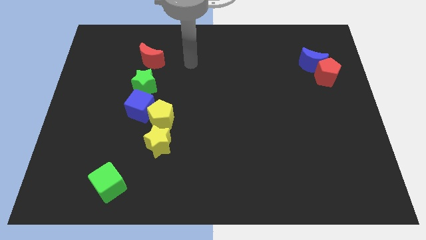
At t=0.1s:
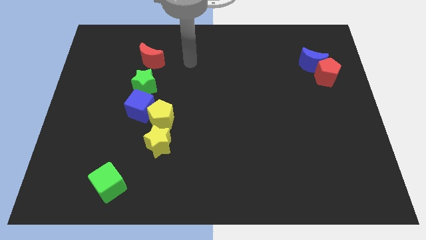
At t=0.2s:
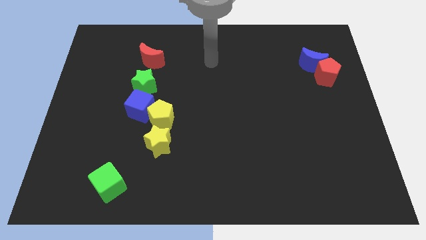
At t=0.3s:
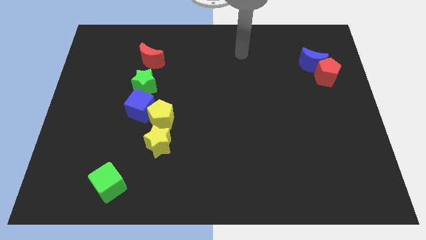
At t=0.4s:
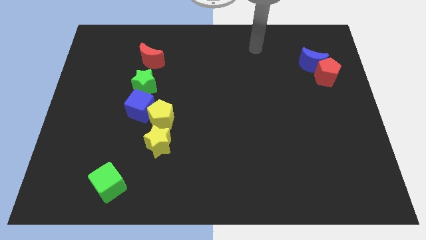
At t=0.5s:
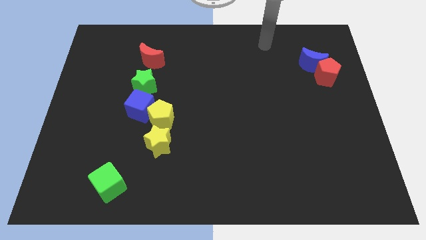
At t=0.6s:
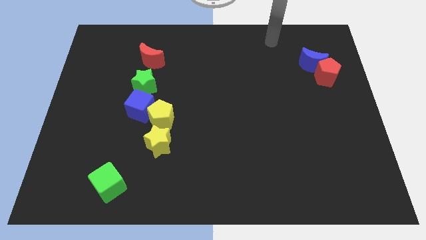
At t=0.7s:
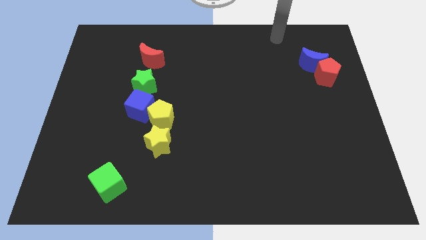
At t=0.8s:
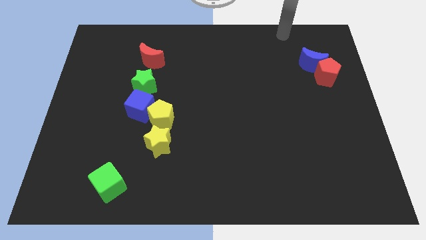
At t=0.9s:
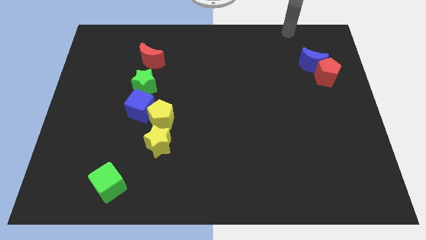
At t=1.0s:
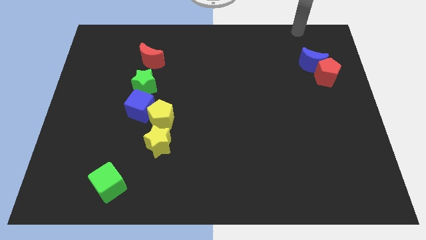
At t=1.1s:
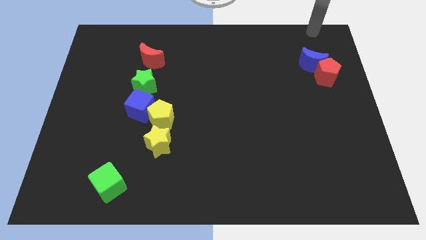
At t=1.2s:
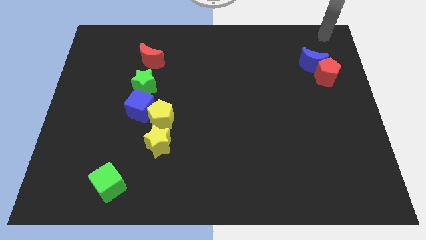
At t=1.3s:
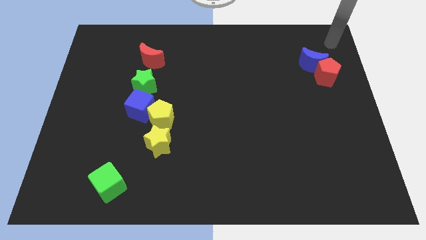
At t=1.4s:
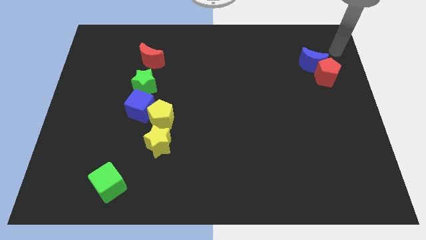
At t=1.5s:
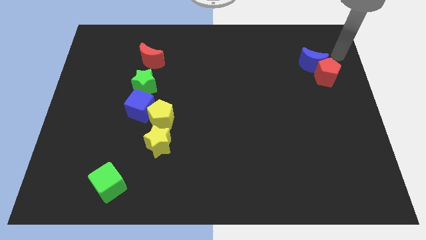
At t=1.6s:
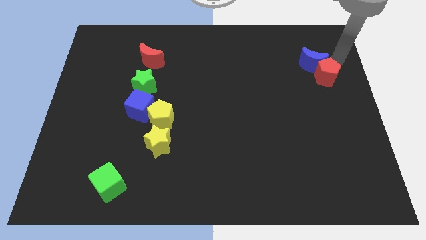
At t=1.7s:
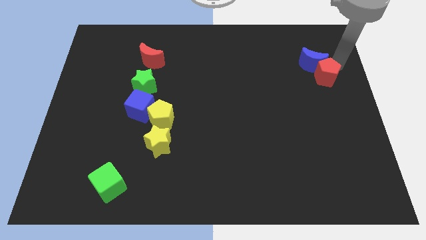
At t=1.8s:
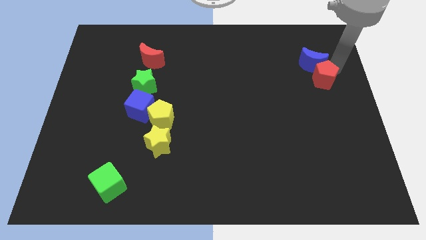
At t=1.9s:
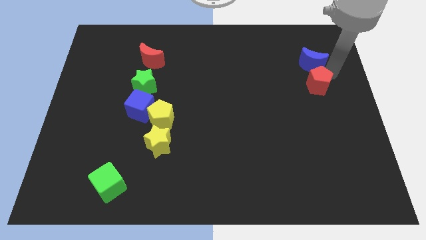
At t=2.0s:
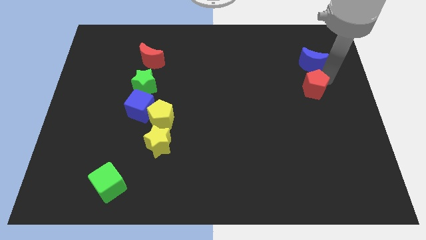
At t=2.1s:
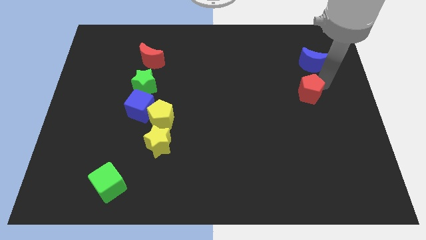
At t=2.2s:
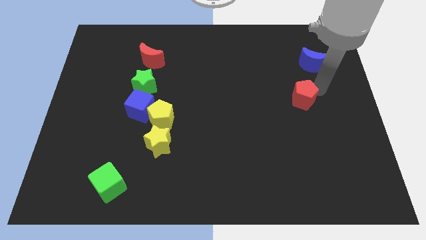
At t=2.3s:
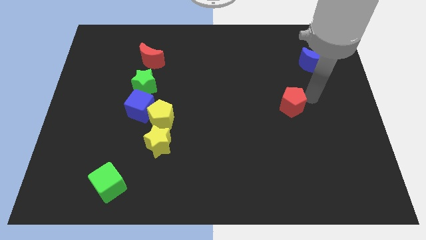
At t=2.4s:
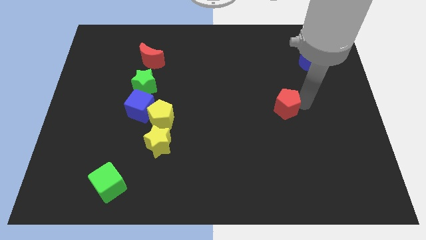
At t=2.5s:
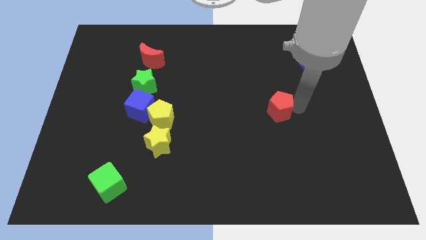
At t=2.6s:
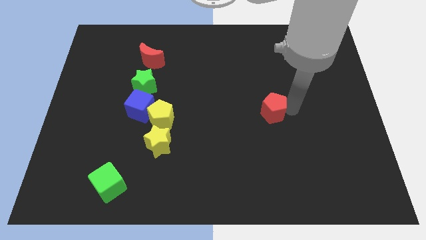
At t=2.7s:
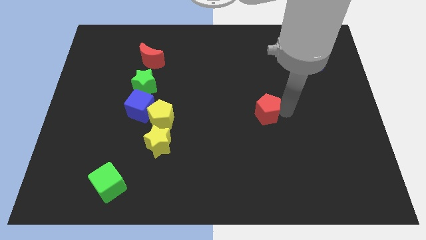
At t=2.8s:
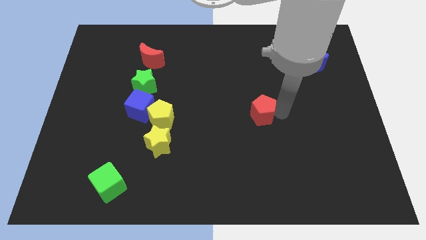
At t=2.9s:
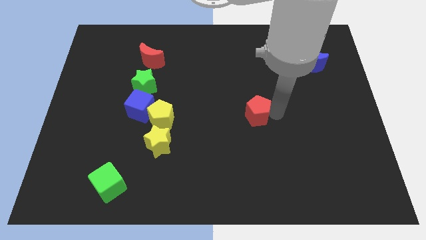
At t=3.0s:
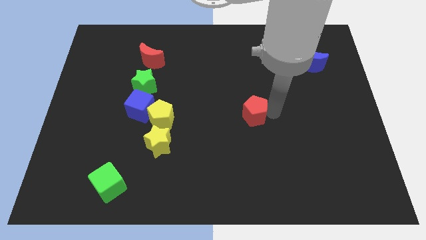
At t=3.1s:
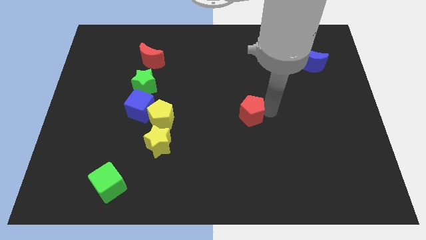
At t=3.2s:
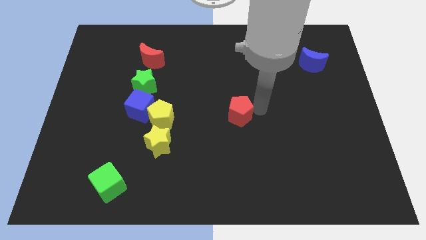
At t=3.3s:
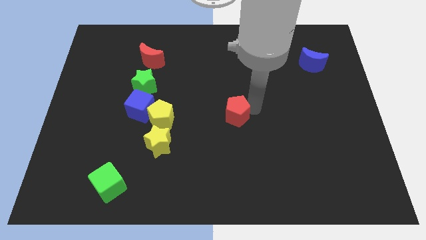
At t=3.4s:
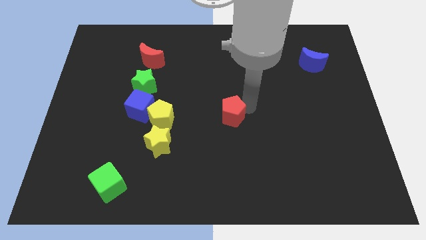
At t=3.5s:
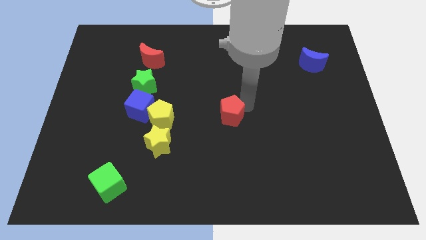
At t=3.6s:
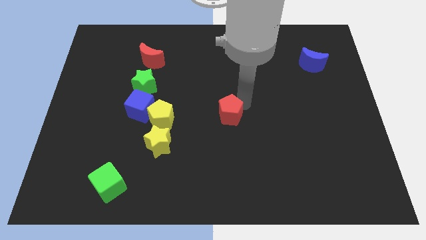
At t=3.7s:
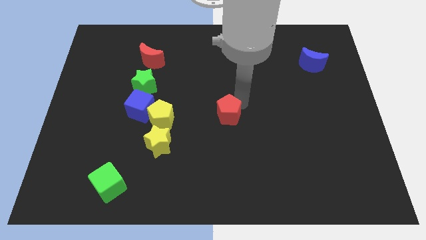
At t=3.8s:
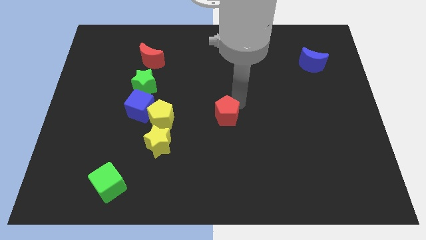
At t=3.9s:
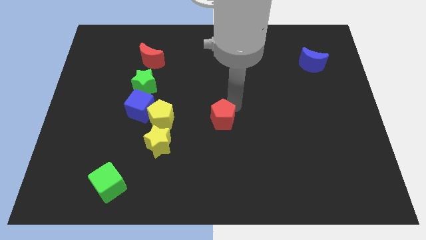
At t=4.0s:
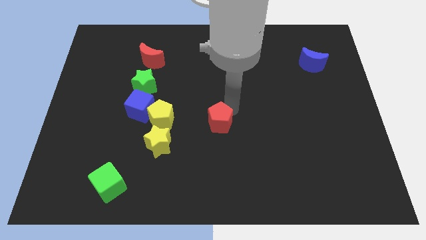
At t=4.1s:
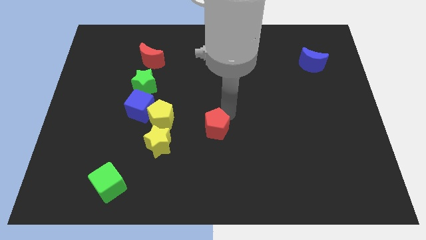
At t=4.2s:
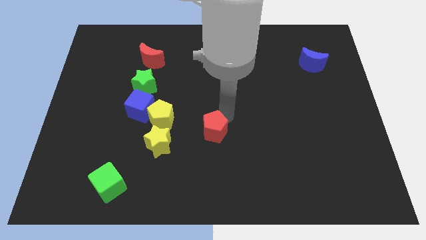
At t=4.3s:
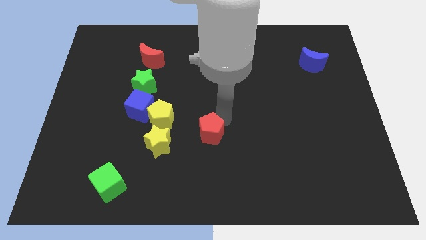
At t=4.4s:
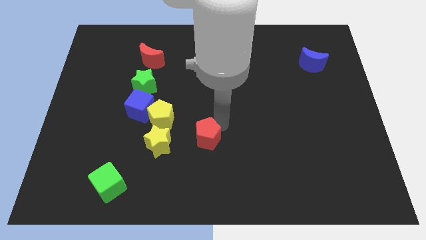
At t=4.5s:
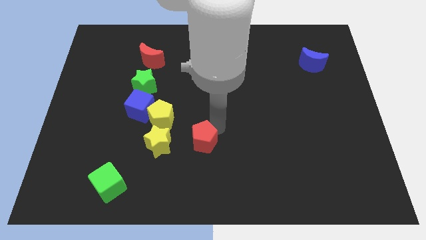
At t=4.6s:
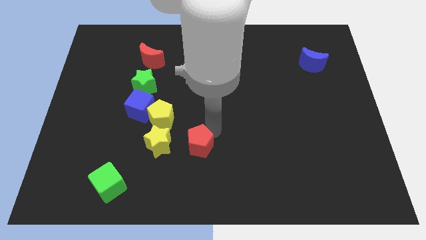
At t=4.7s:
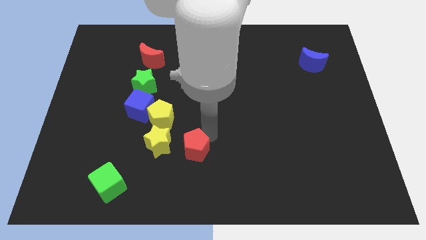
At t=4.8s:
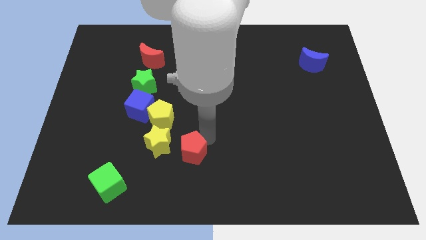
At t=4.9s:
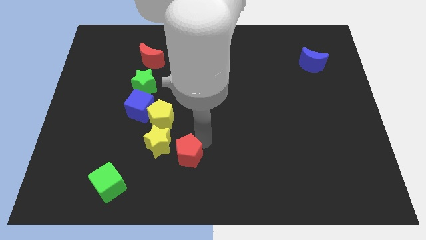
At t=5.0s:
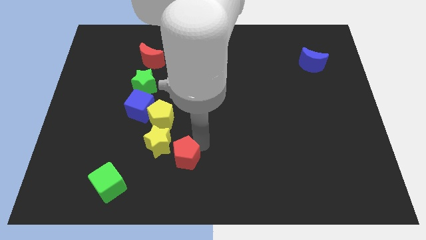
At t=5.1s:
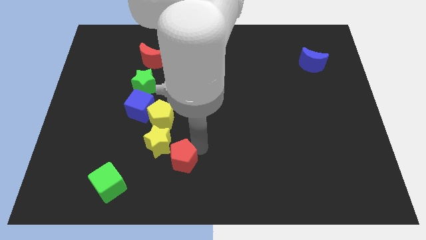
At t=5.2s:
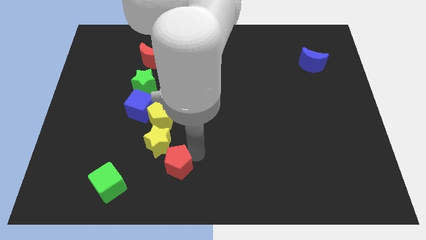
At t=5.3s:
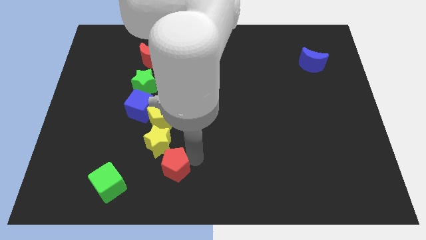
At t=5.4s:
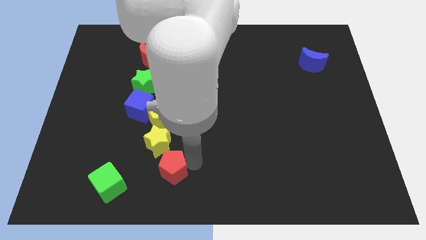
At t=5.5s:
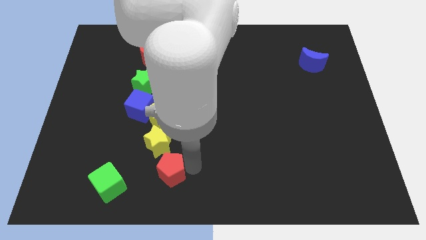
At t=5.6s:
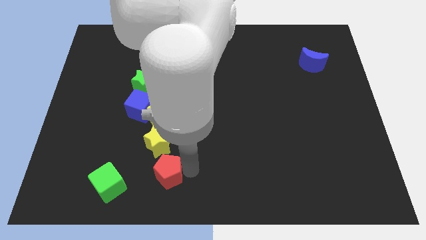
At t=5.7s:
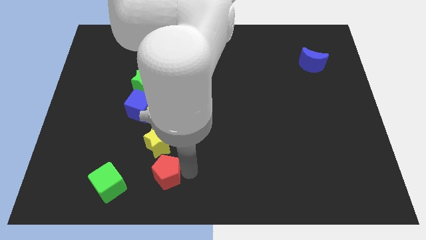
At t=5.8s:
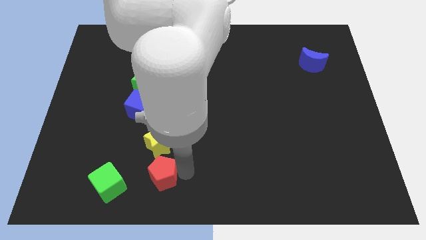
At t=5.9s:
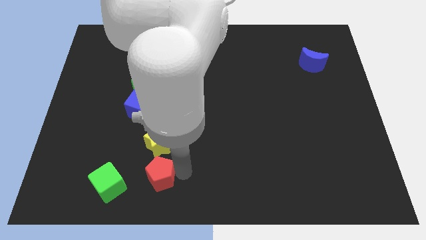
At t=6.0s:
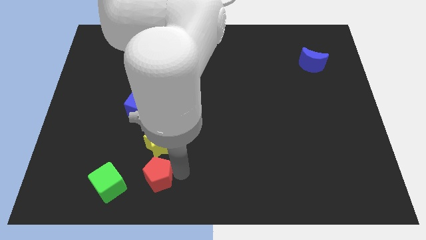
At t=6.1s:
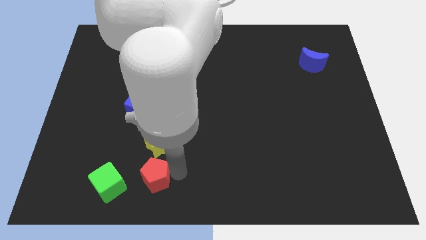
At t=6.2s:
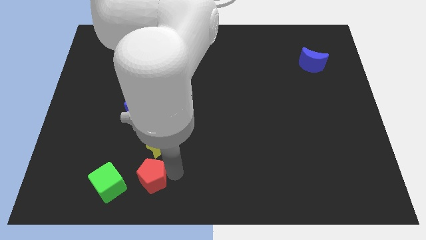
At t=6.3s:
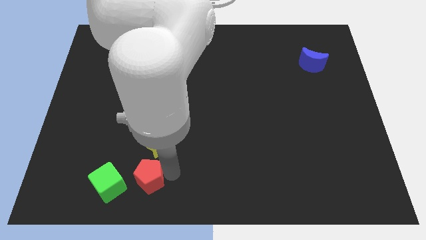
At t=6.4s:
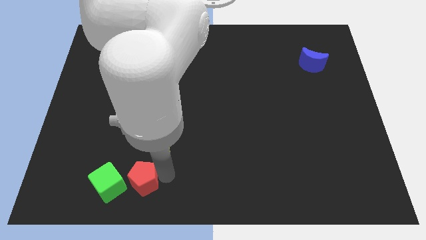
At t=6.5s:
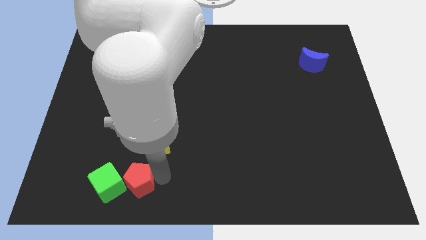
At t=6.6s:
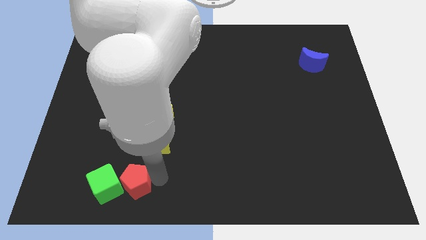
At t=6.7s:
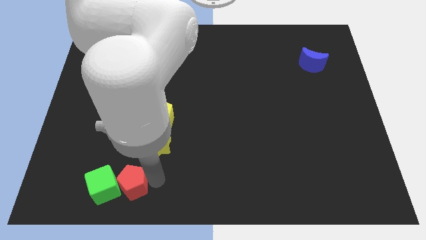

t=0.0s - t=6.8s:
slide the red pentagon close to the green cube

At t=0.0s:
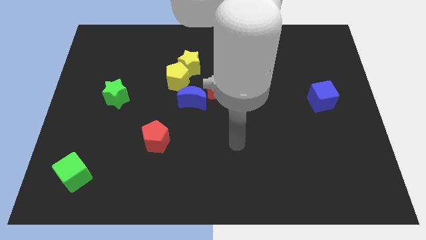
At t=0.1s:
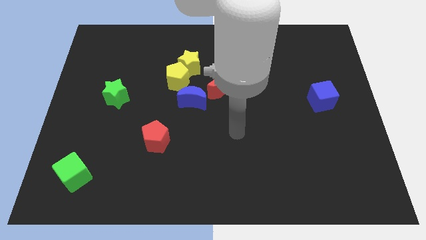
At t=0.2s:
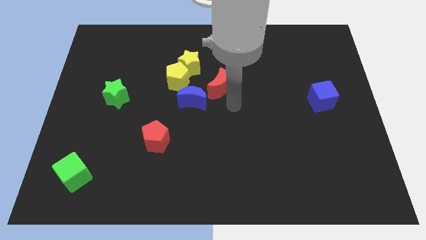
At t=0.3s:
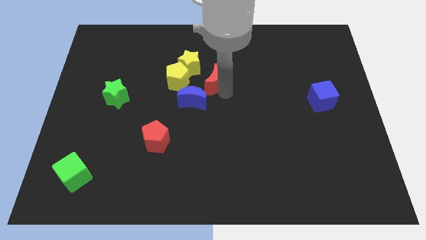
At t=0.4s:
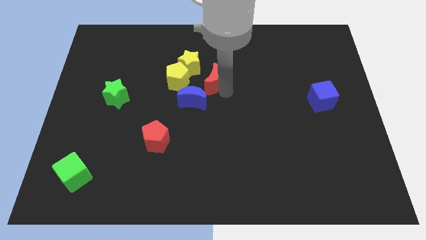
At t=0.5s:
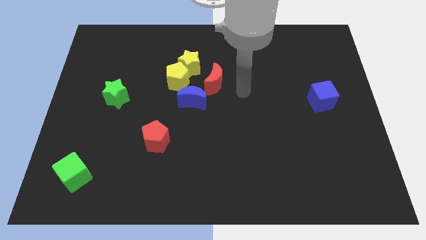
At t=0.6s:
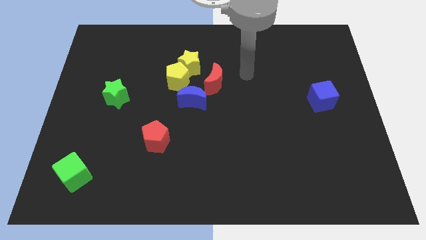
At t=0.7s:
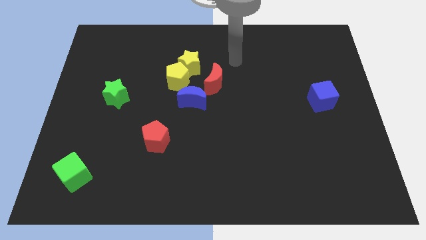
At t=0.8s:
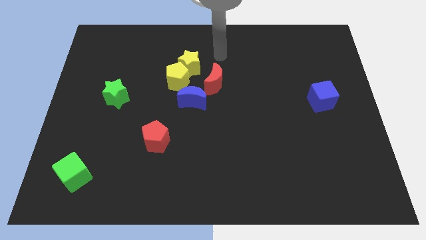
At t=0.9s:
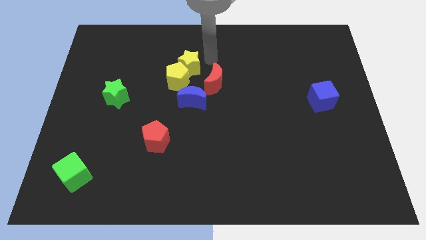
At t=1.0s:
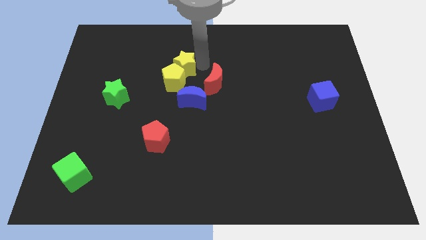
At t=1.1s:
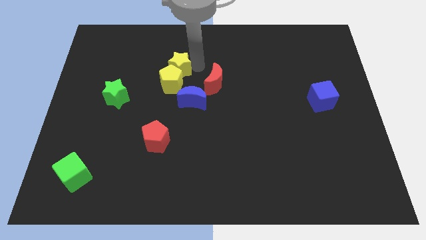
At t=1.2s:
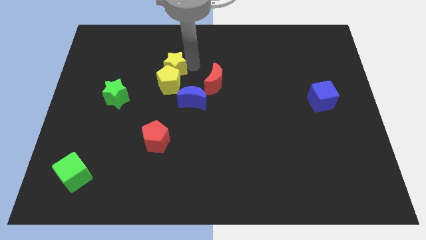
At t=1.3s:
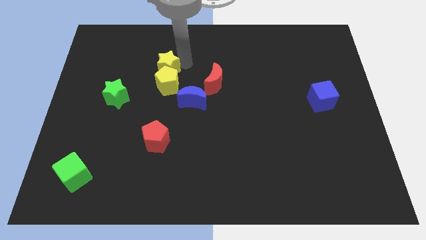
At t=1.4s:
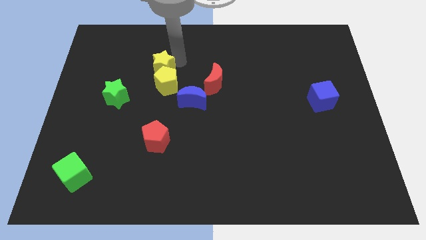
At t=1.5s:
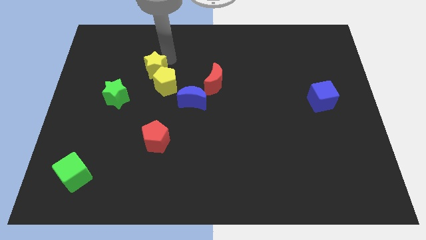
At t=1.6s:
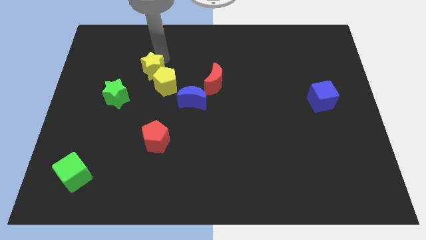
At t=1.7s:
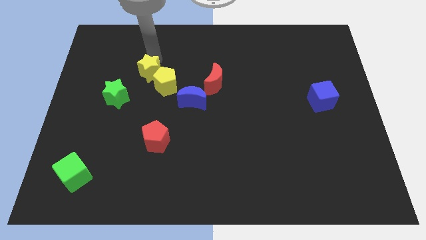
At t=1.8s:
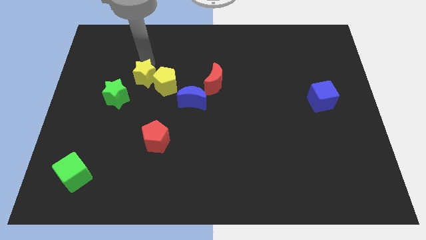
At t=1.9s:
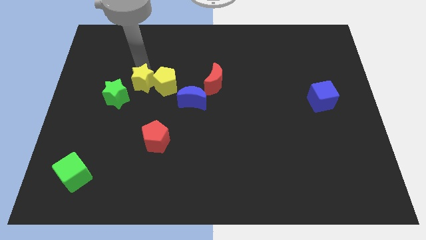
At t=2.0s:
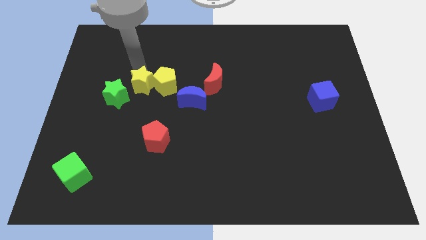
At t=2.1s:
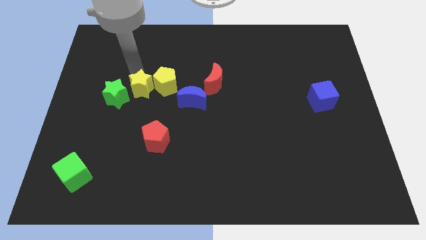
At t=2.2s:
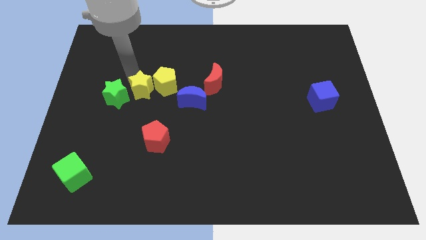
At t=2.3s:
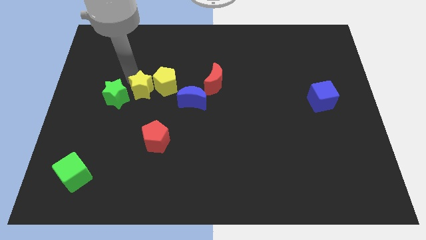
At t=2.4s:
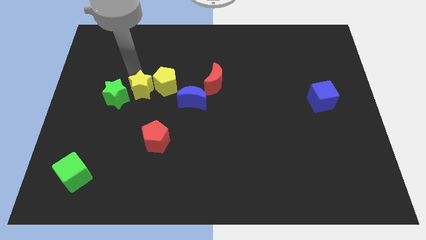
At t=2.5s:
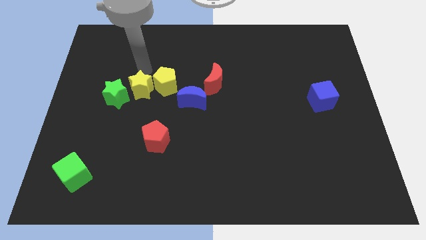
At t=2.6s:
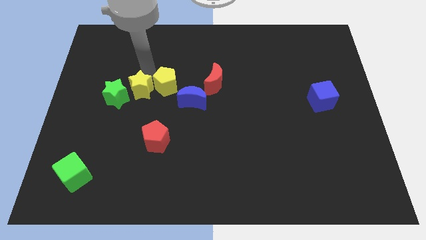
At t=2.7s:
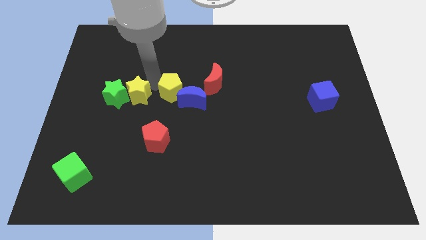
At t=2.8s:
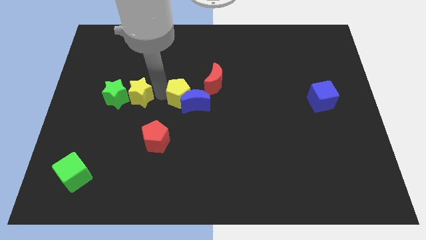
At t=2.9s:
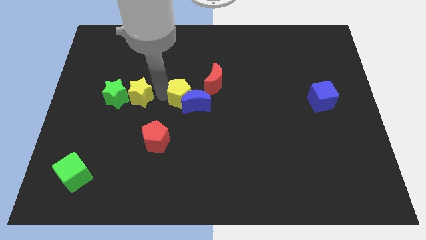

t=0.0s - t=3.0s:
move the yellow star close to the green star
